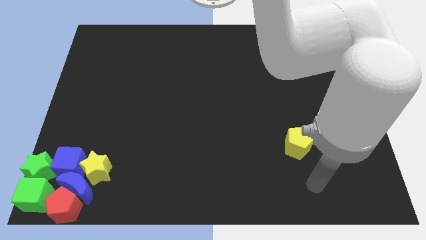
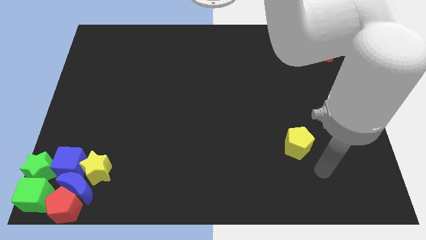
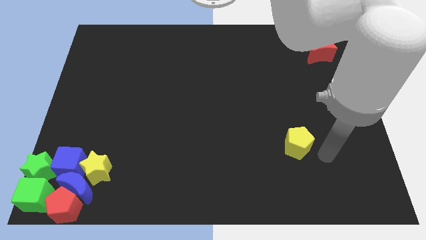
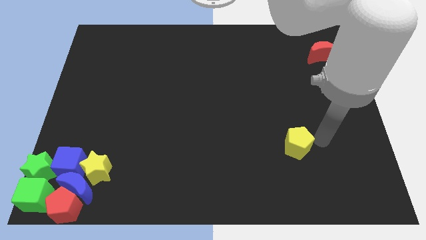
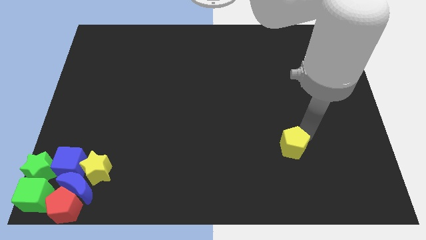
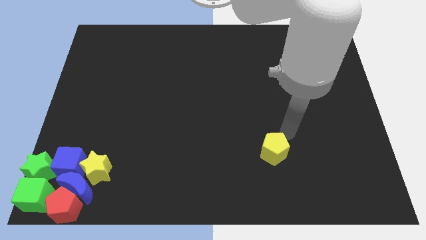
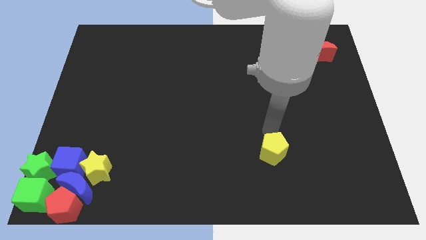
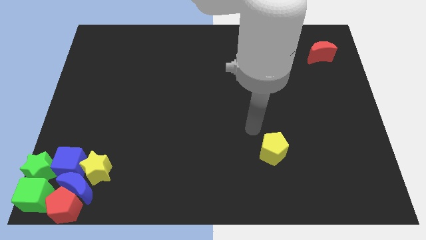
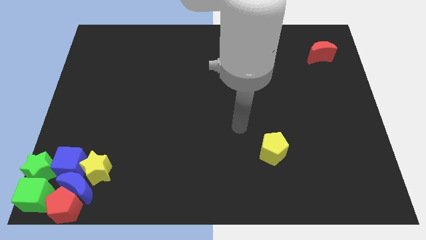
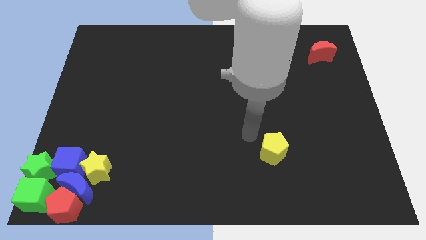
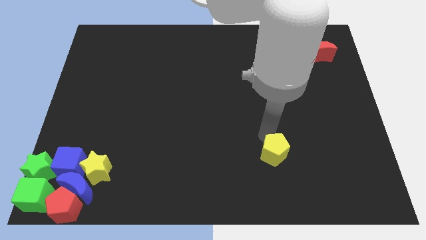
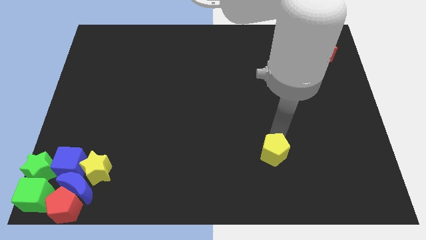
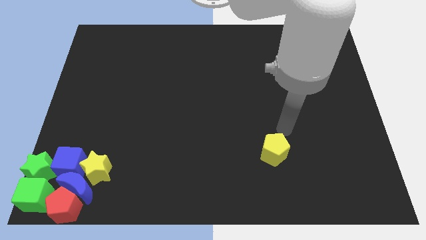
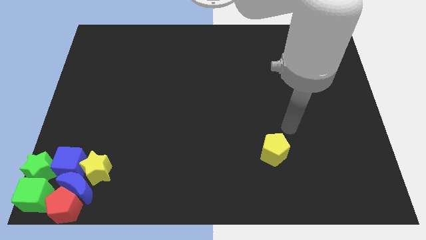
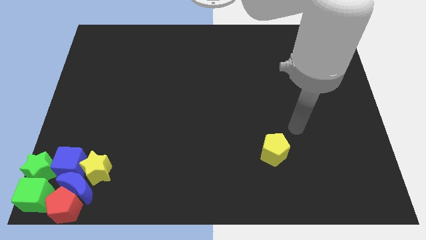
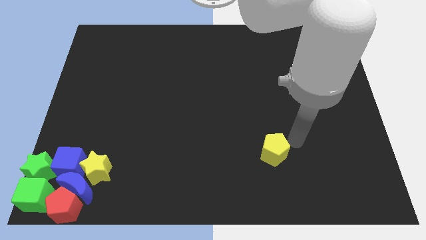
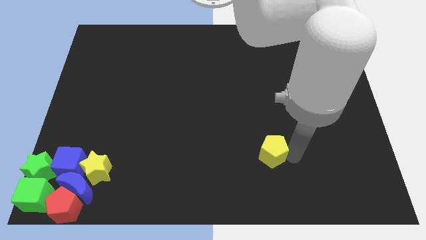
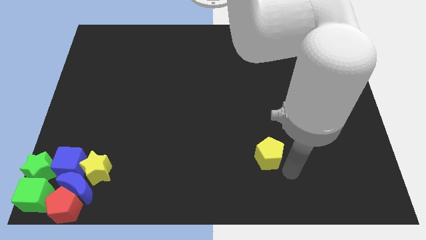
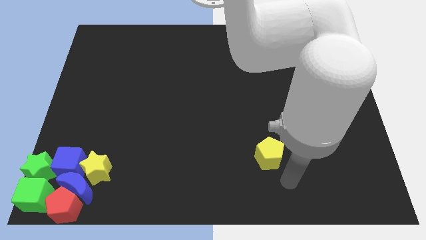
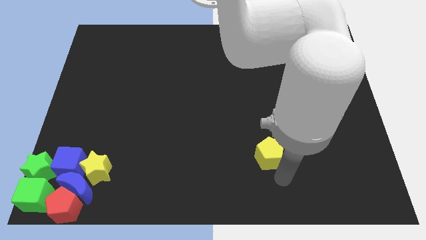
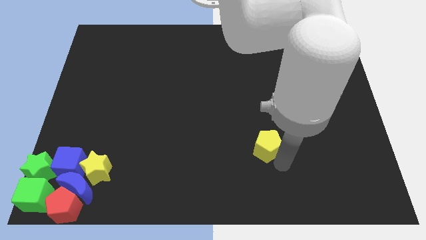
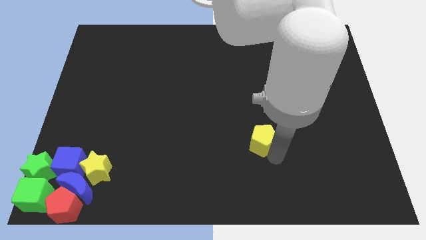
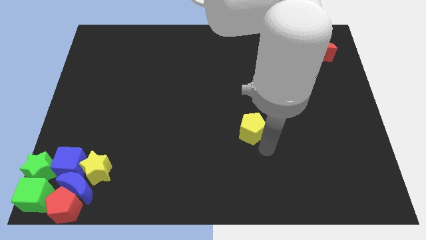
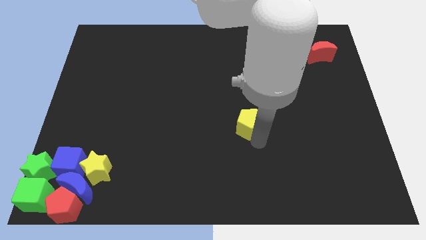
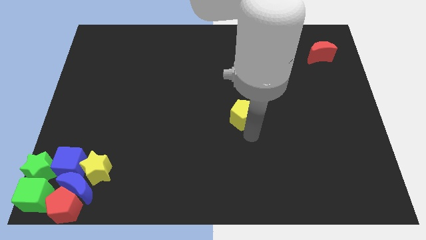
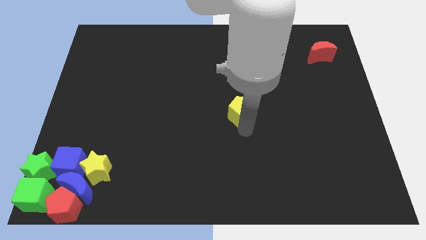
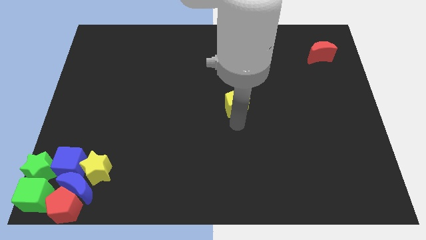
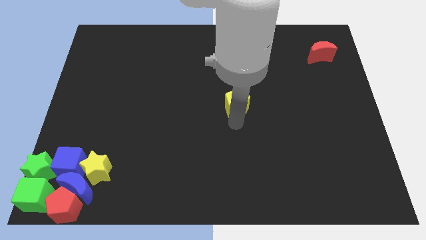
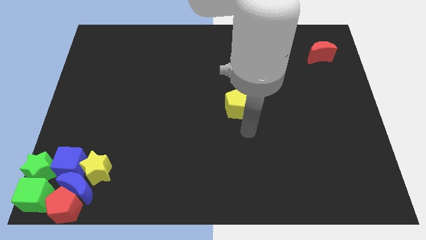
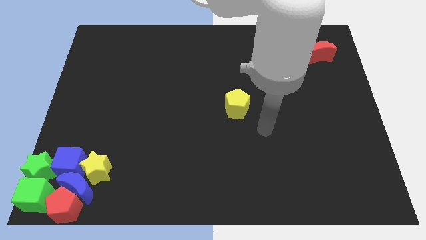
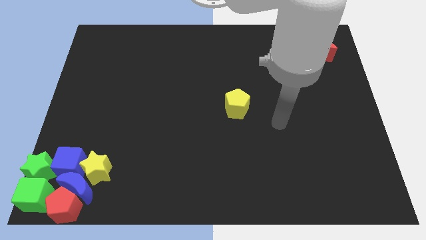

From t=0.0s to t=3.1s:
move the yellow pentagon towards the center of the board

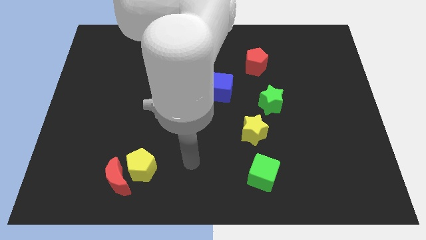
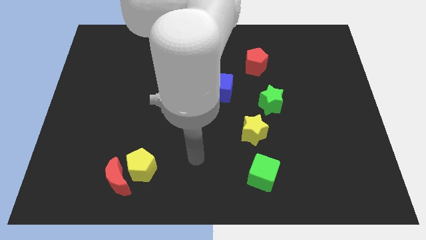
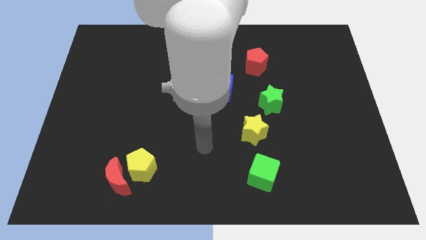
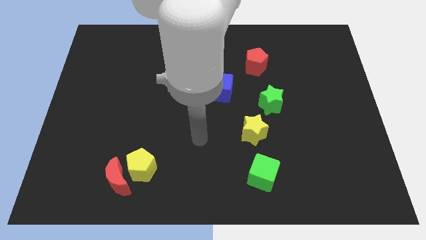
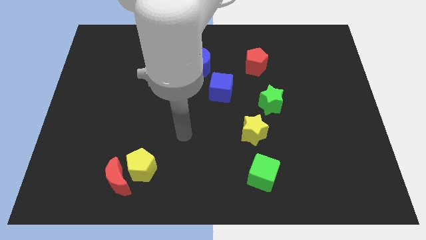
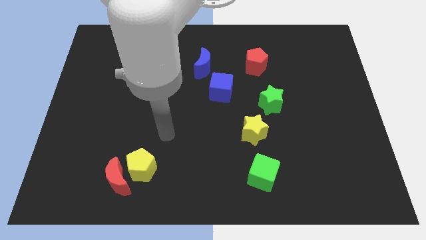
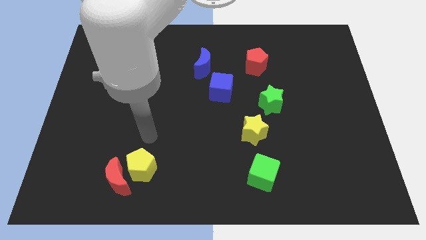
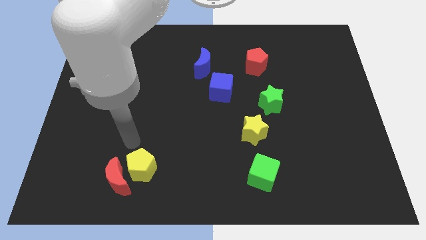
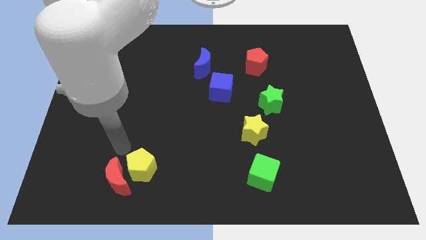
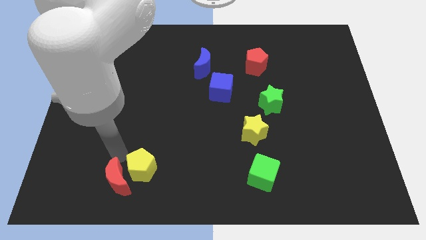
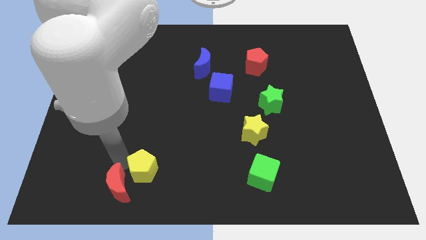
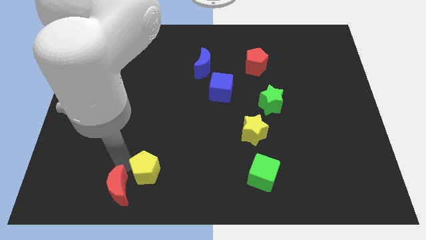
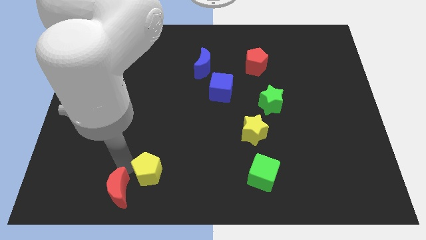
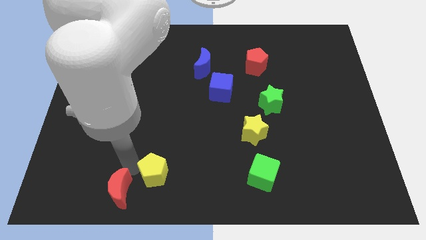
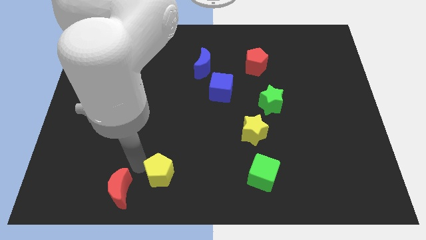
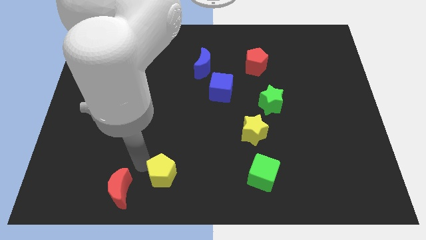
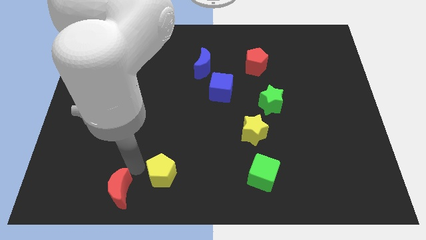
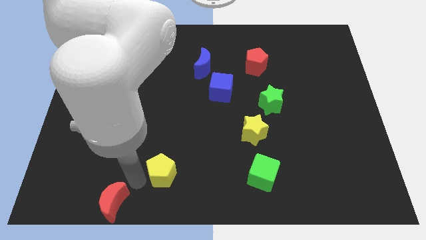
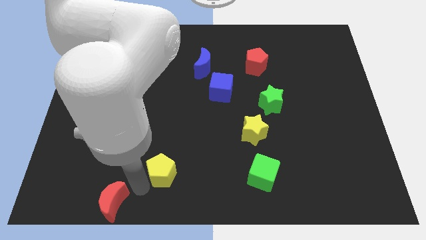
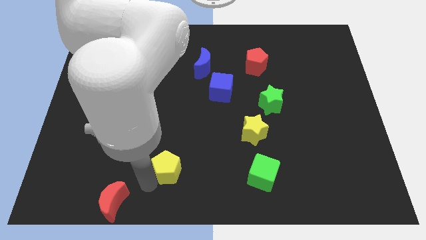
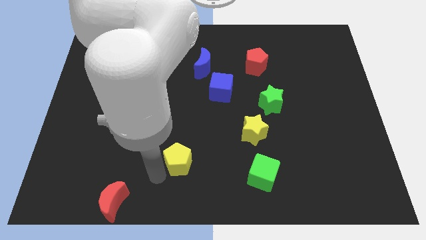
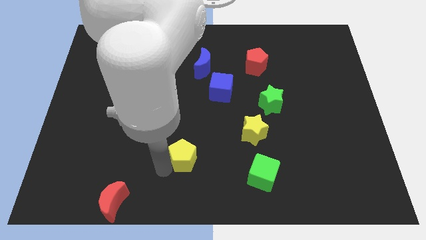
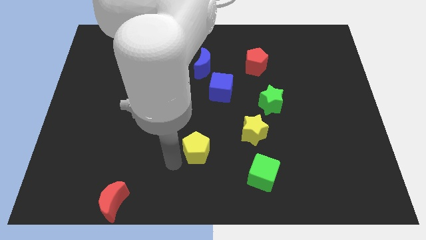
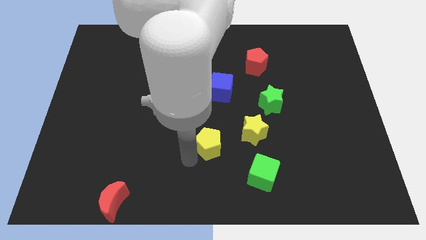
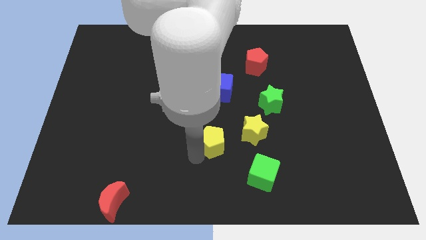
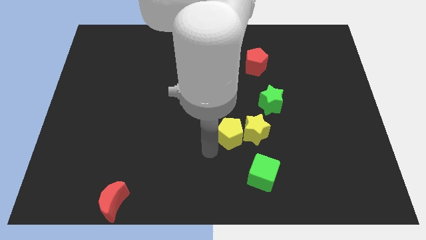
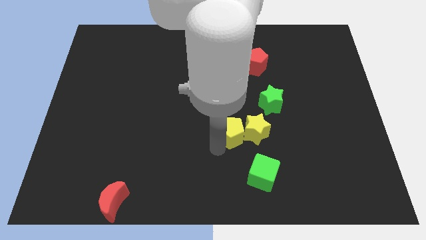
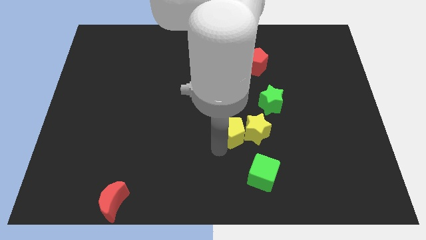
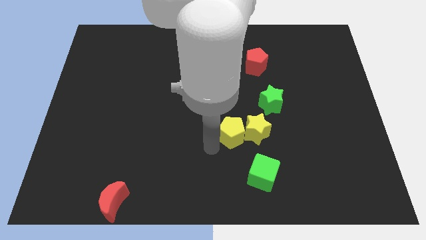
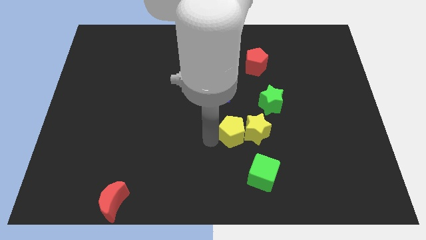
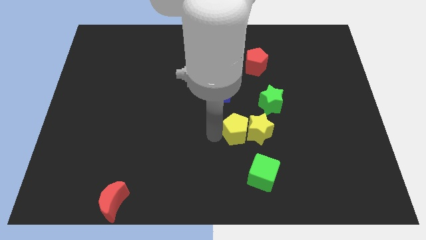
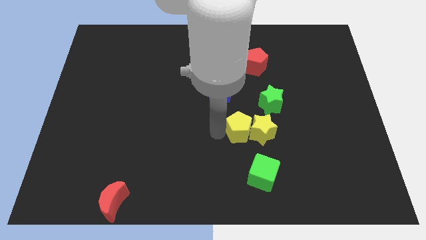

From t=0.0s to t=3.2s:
separate the yellow pentagon from red moon

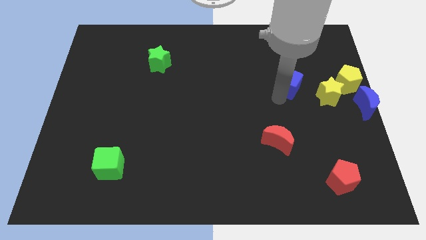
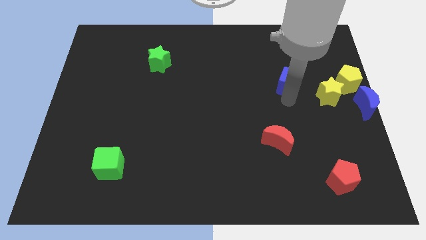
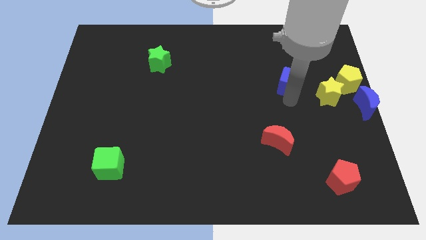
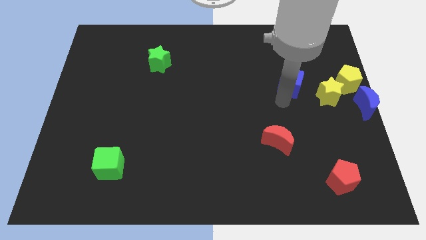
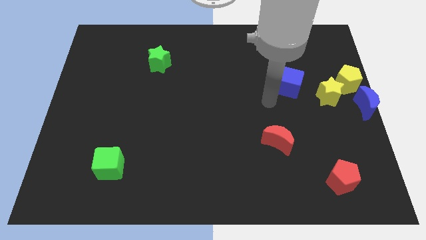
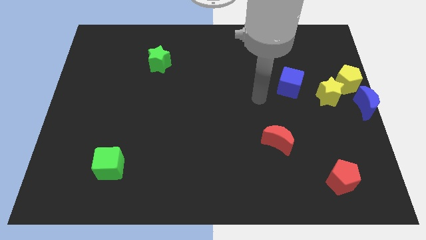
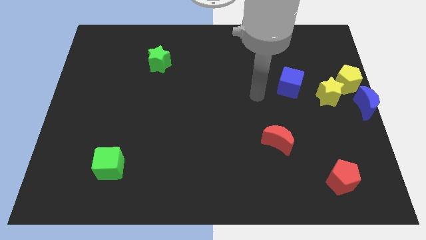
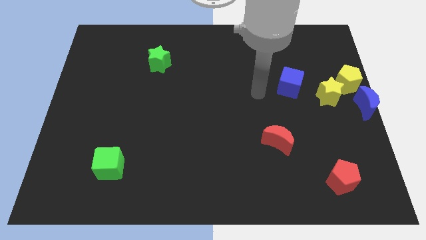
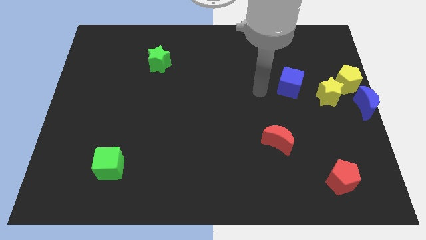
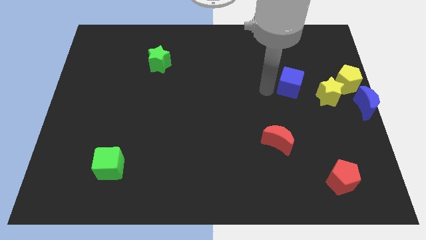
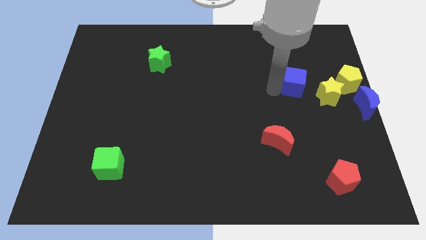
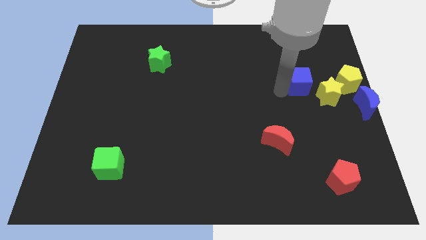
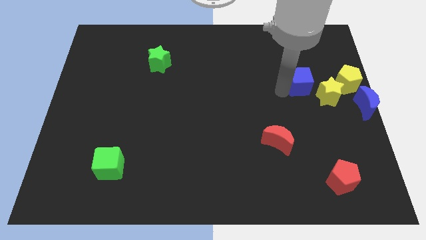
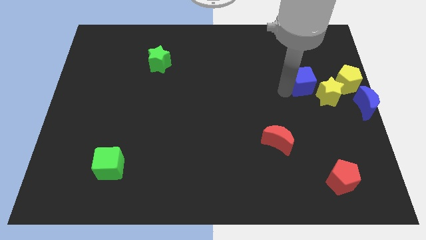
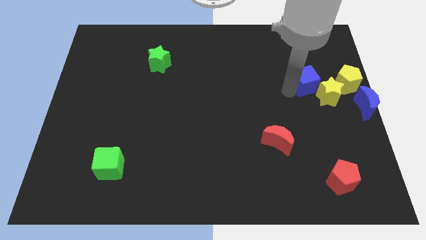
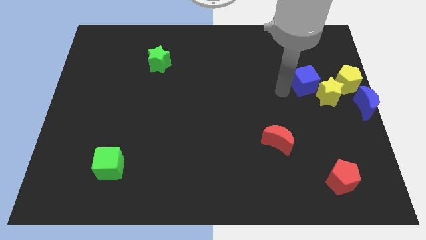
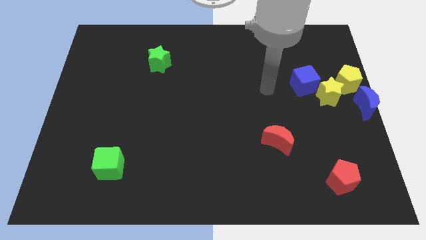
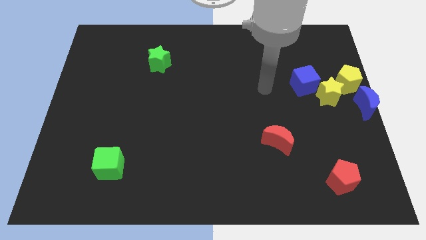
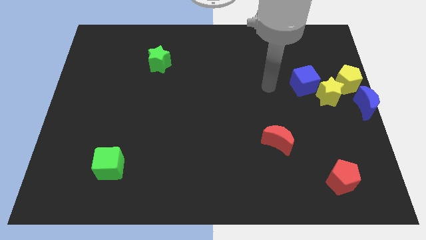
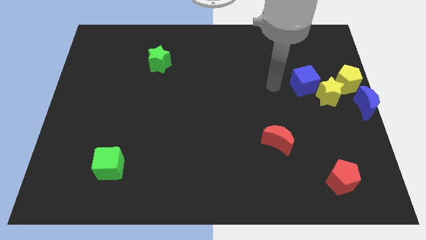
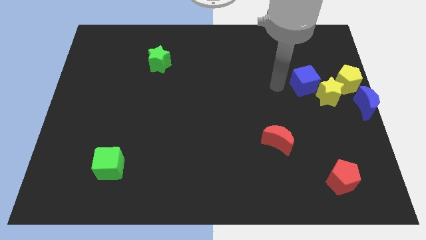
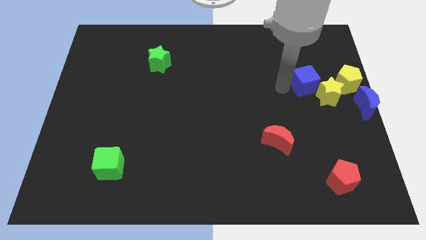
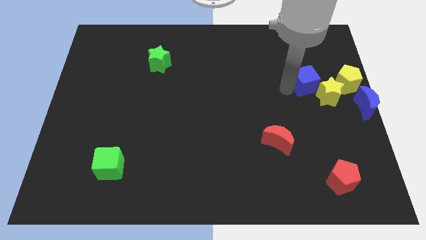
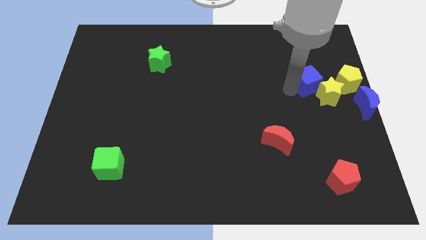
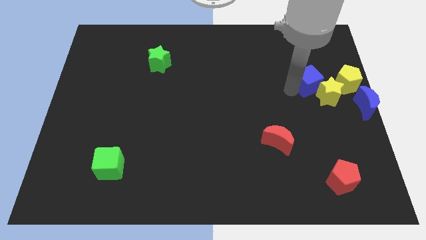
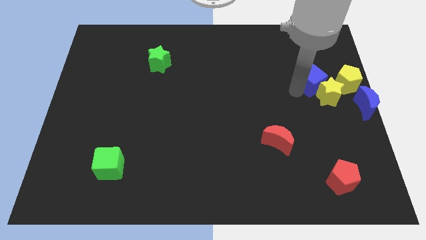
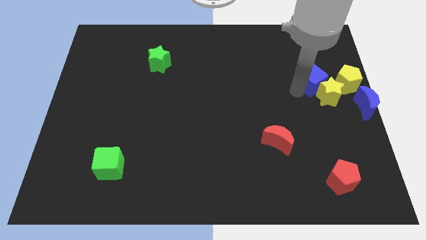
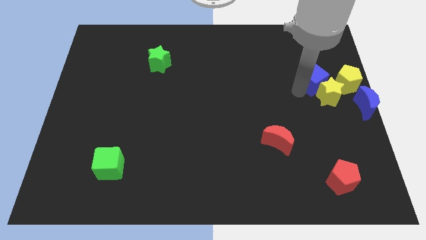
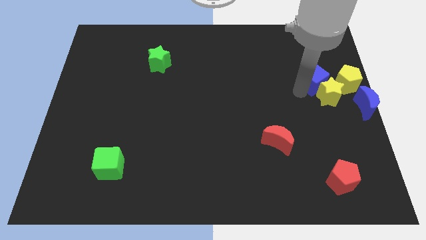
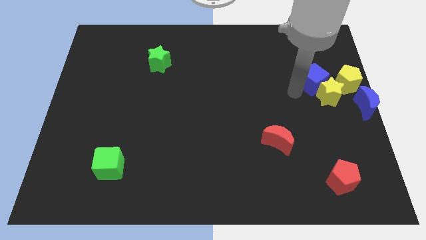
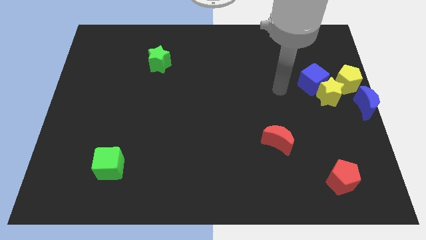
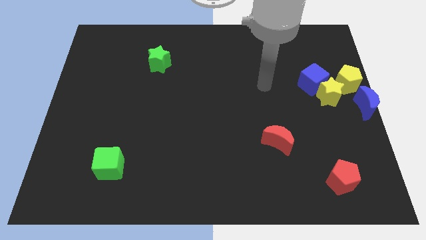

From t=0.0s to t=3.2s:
place the blue cube into the top right of the yellow star
